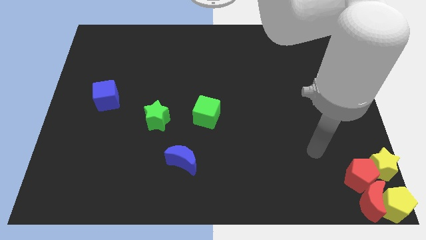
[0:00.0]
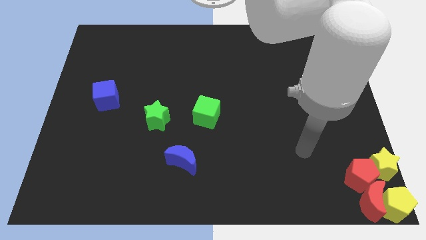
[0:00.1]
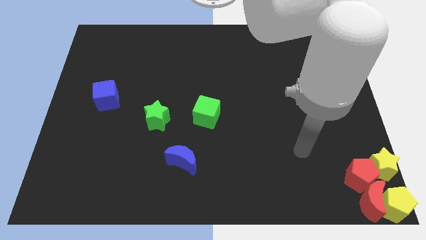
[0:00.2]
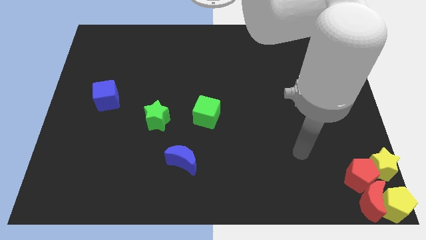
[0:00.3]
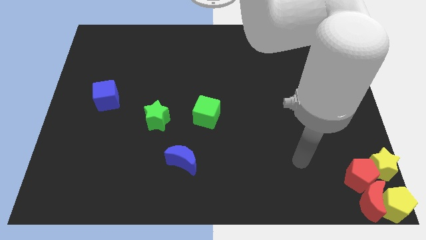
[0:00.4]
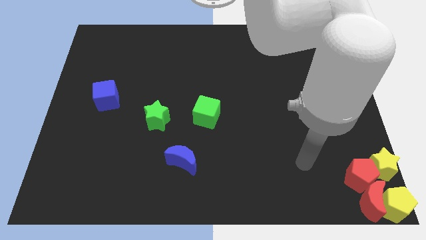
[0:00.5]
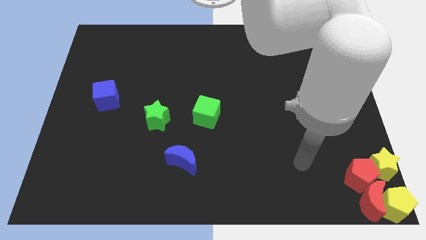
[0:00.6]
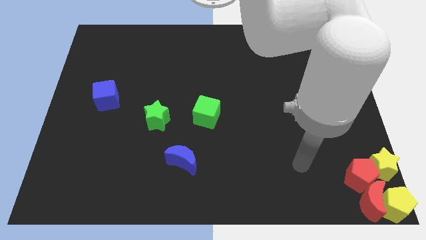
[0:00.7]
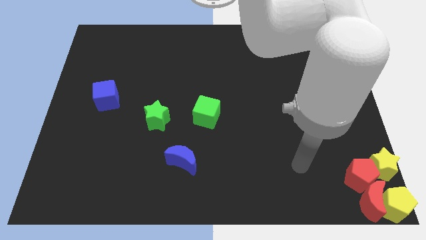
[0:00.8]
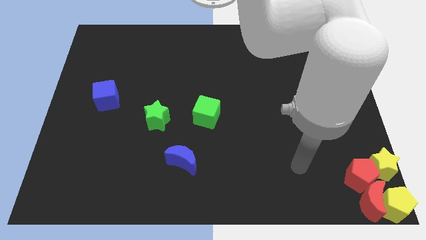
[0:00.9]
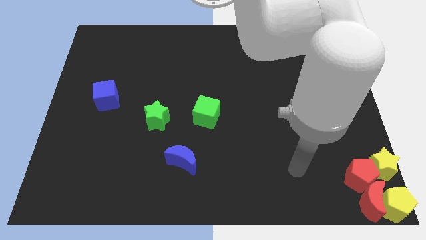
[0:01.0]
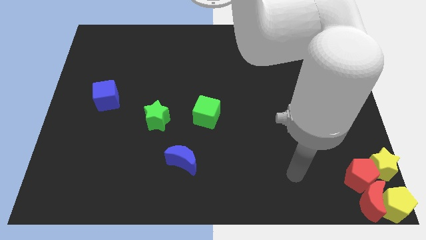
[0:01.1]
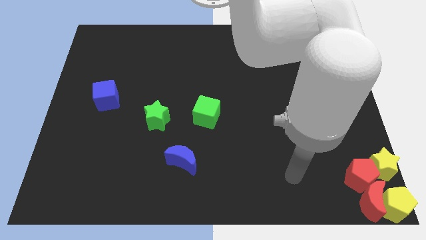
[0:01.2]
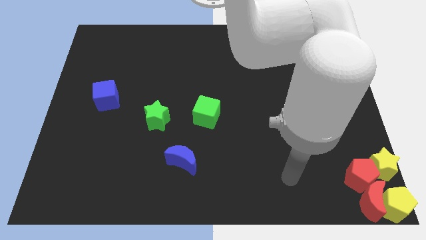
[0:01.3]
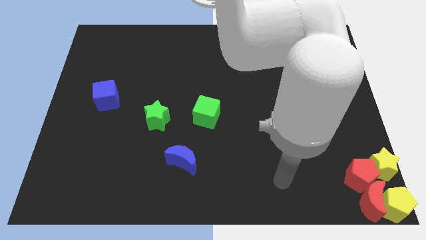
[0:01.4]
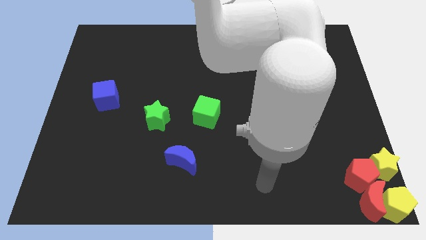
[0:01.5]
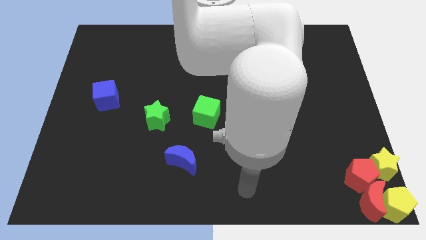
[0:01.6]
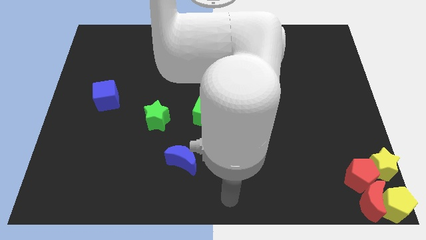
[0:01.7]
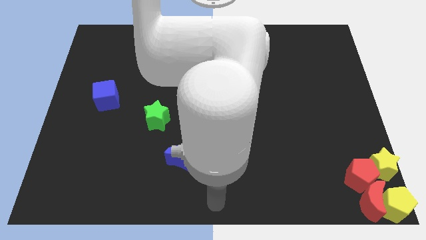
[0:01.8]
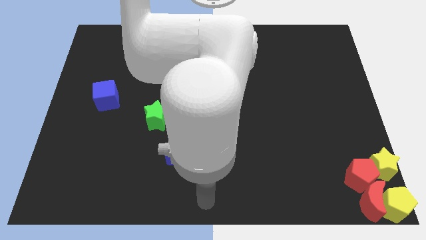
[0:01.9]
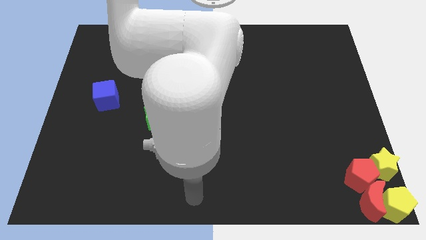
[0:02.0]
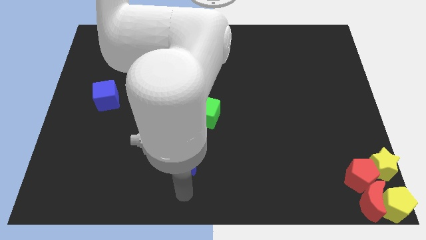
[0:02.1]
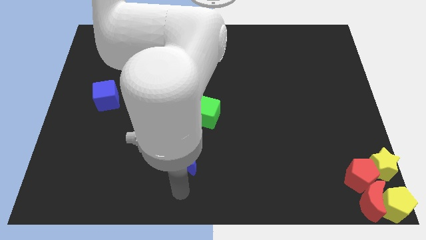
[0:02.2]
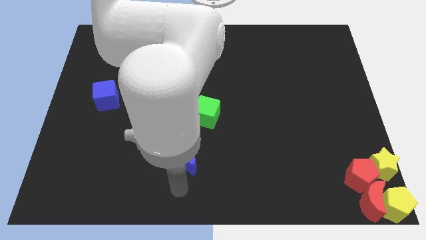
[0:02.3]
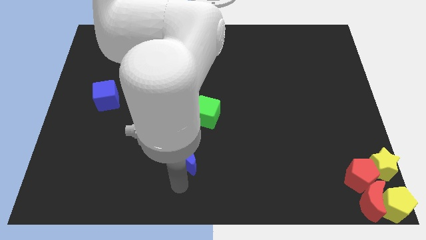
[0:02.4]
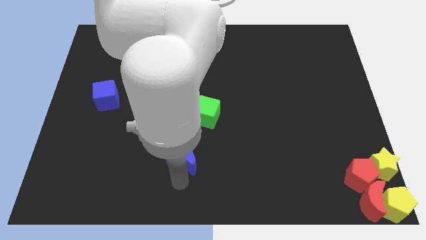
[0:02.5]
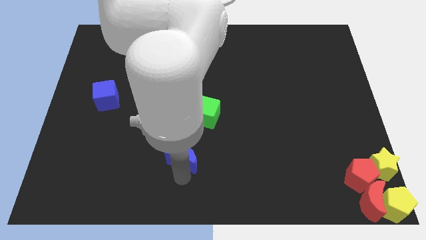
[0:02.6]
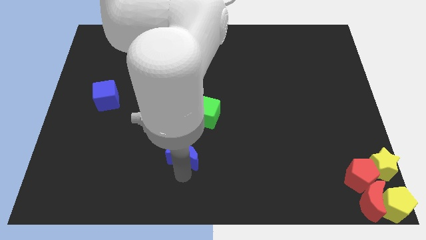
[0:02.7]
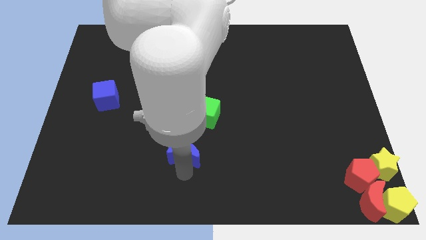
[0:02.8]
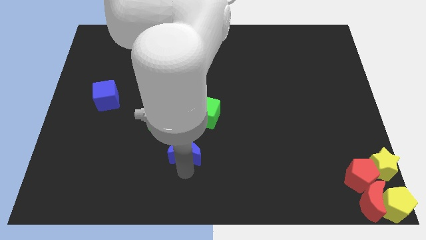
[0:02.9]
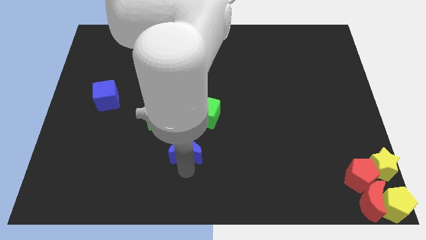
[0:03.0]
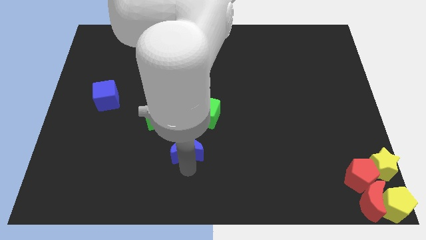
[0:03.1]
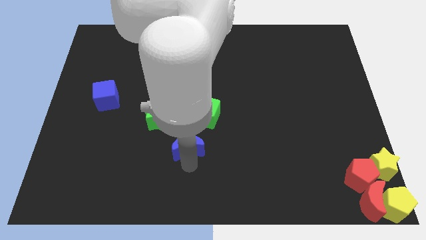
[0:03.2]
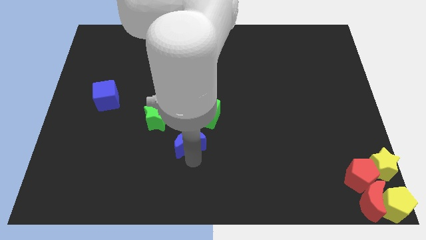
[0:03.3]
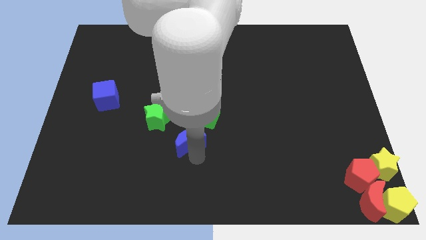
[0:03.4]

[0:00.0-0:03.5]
move the blue crescent to the bottom of the green cube

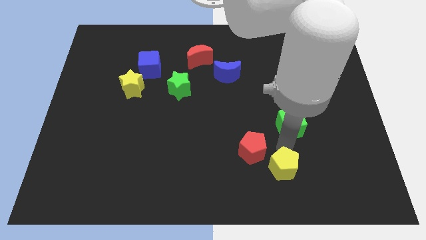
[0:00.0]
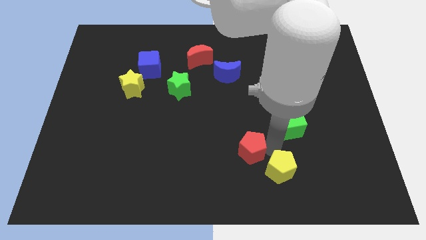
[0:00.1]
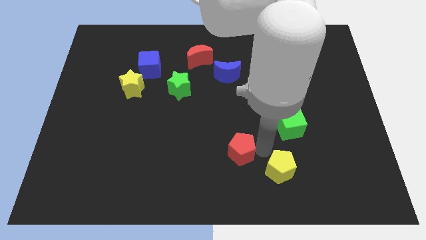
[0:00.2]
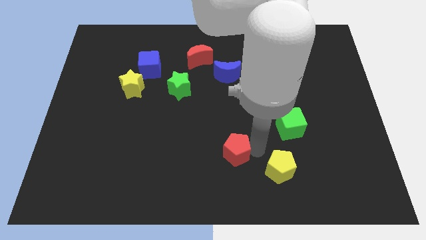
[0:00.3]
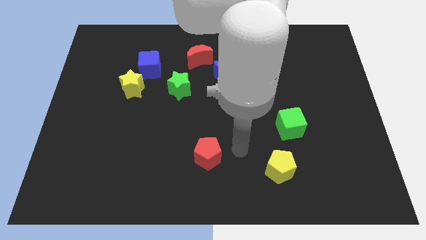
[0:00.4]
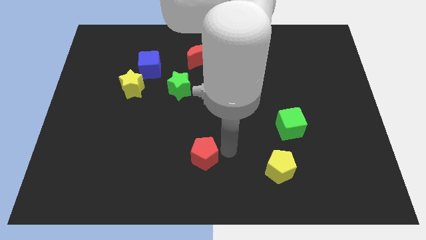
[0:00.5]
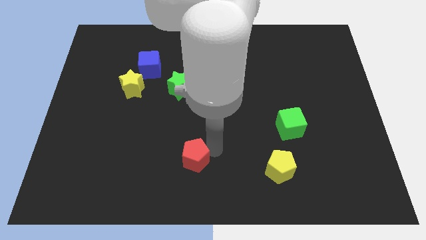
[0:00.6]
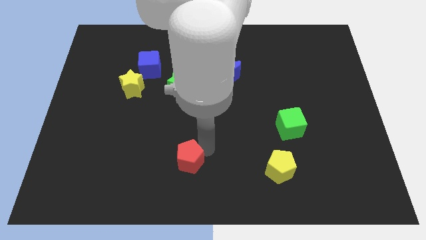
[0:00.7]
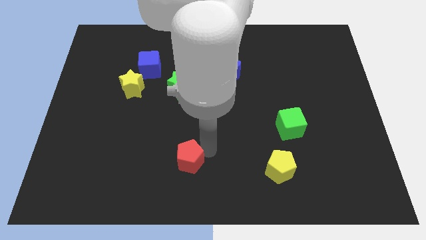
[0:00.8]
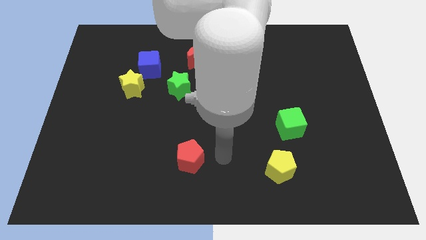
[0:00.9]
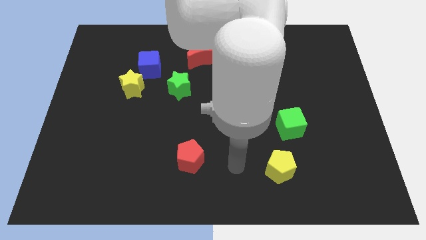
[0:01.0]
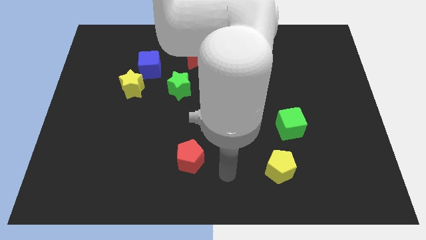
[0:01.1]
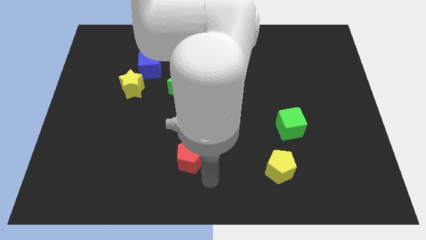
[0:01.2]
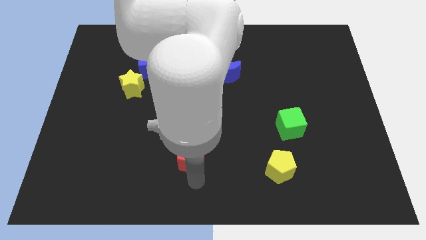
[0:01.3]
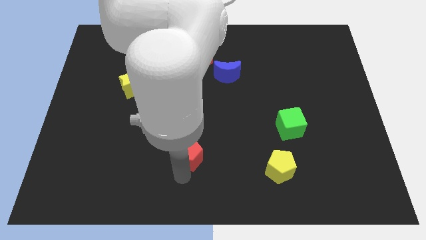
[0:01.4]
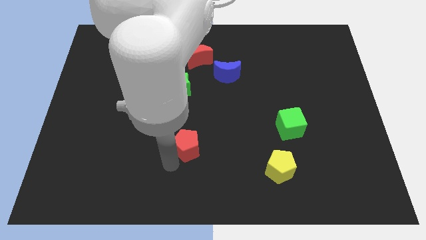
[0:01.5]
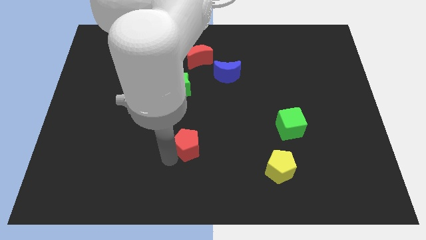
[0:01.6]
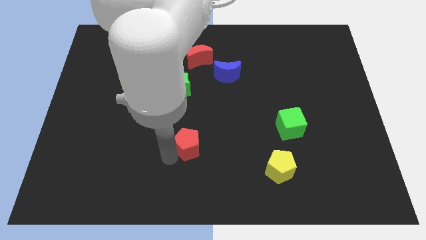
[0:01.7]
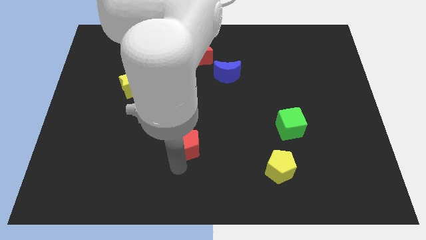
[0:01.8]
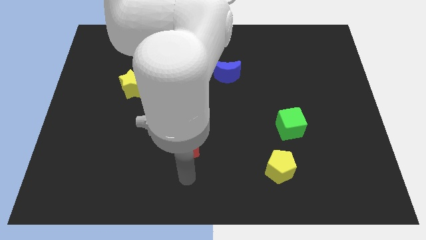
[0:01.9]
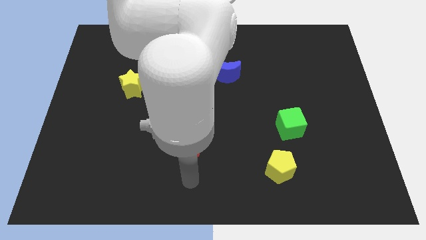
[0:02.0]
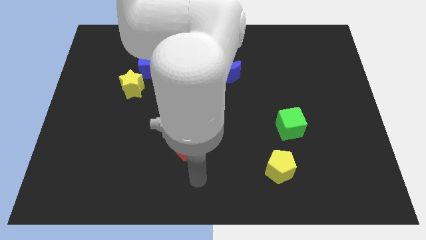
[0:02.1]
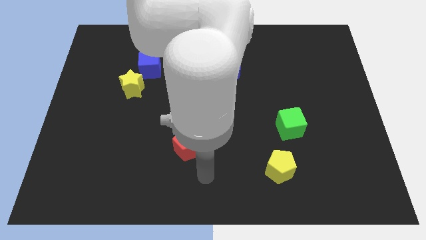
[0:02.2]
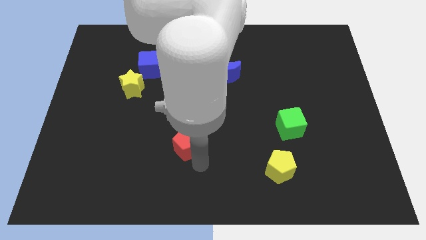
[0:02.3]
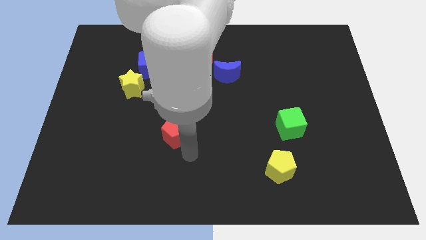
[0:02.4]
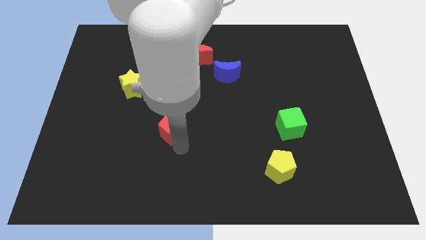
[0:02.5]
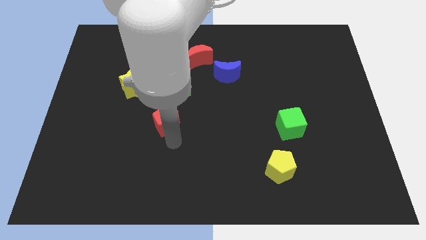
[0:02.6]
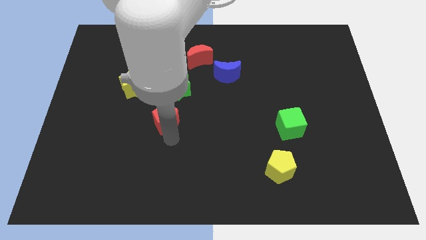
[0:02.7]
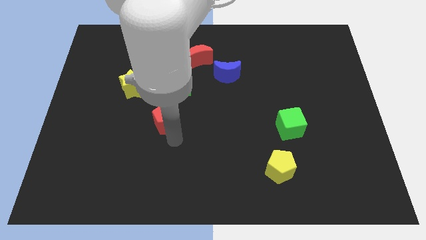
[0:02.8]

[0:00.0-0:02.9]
move the red pentagon to the bottom left of the green star

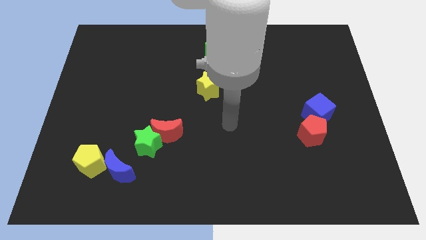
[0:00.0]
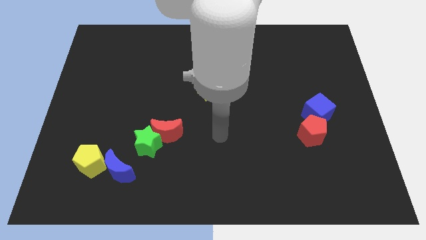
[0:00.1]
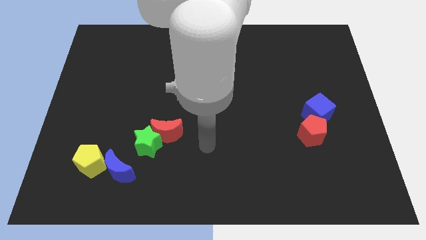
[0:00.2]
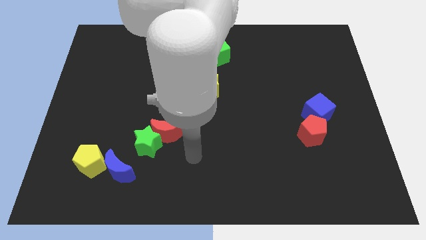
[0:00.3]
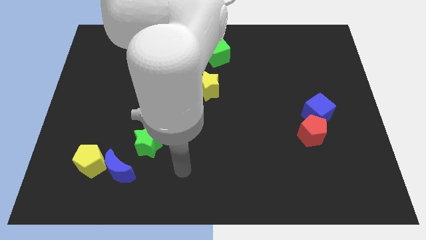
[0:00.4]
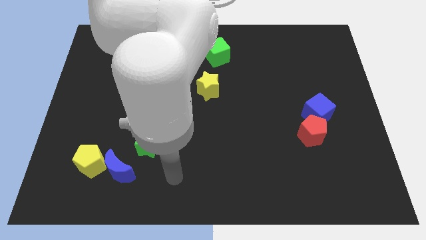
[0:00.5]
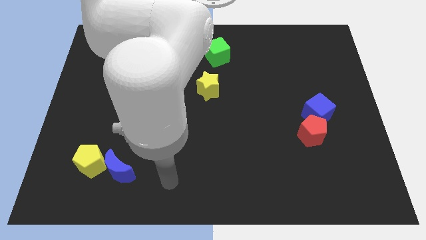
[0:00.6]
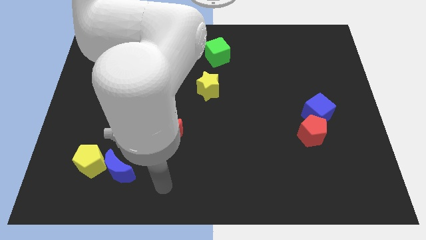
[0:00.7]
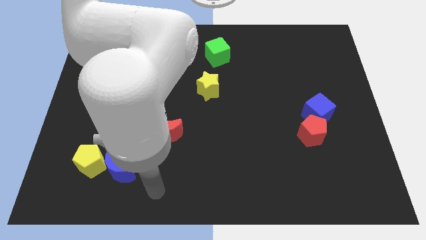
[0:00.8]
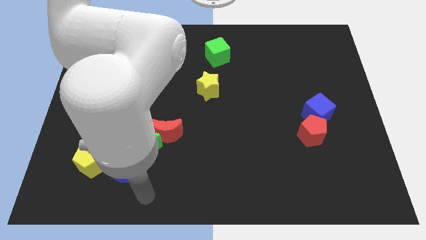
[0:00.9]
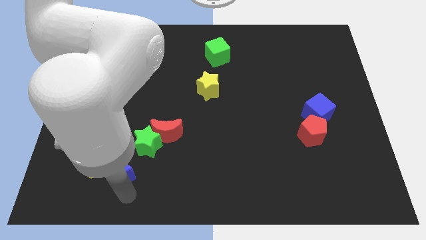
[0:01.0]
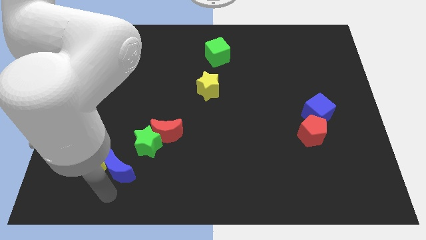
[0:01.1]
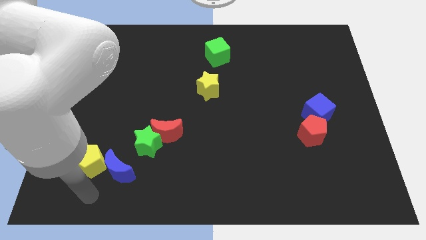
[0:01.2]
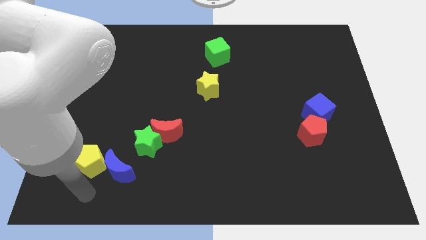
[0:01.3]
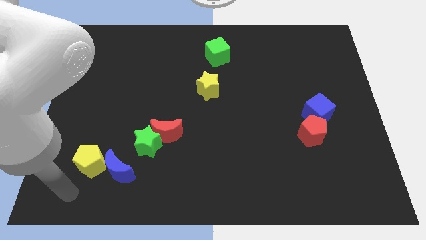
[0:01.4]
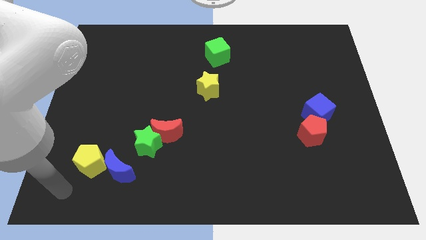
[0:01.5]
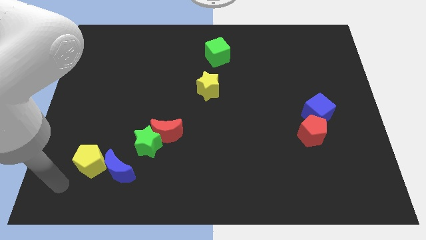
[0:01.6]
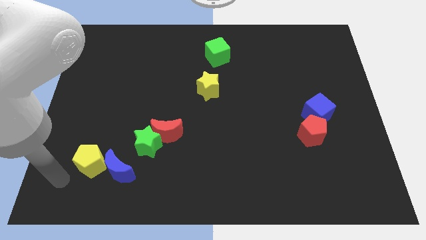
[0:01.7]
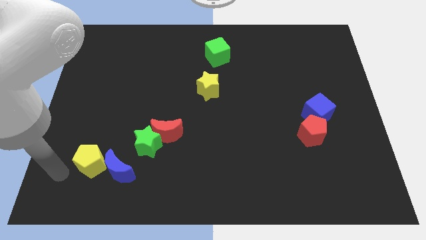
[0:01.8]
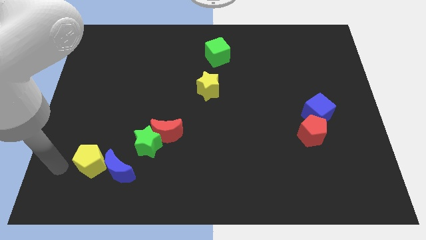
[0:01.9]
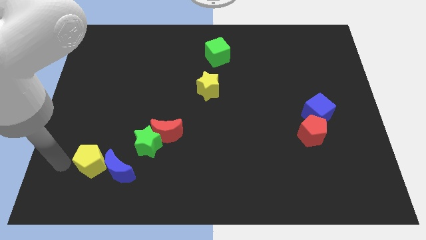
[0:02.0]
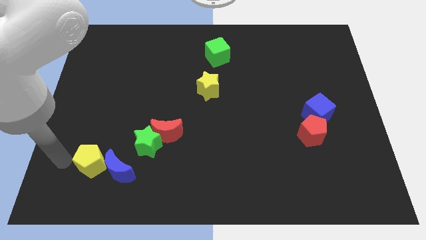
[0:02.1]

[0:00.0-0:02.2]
move your arm to the left of the yellow pentagon

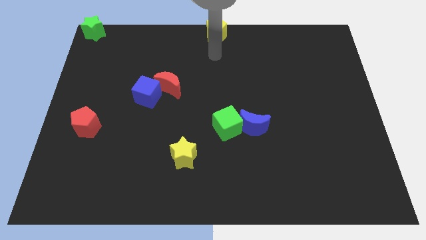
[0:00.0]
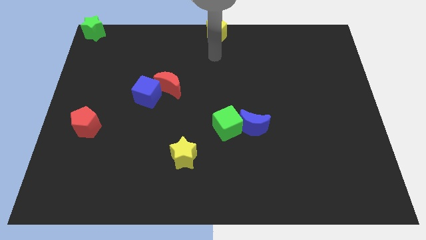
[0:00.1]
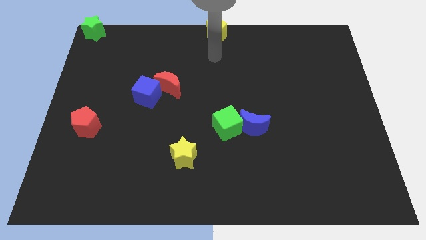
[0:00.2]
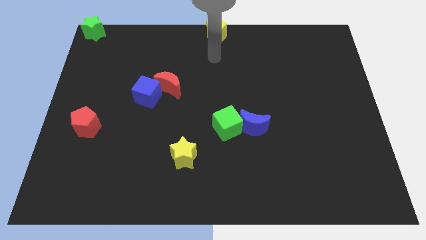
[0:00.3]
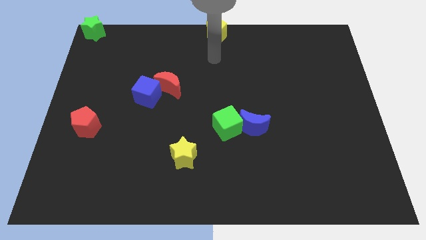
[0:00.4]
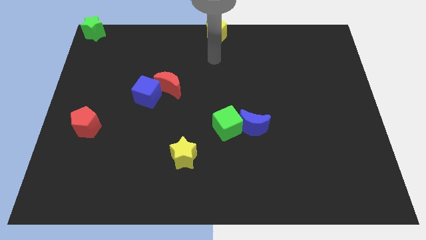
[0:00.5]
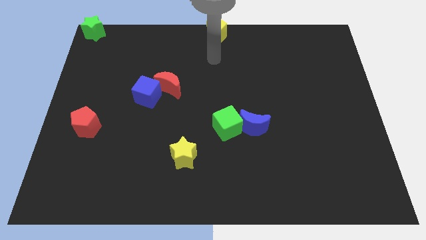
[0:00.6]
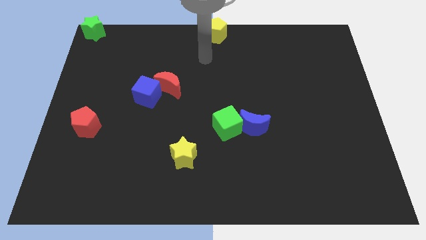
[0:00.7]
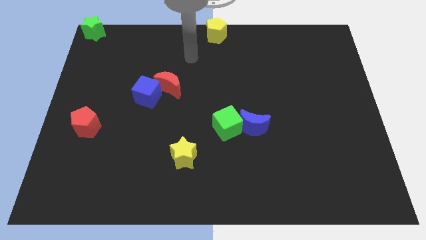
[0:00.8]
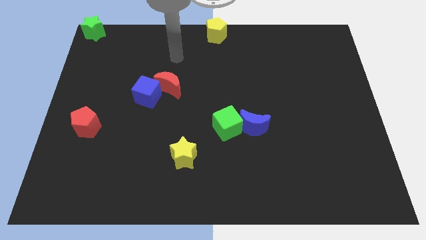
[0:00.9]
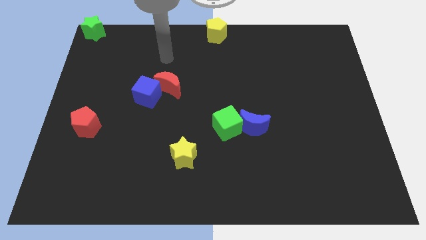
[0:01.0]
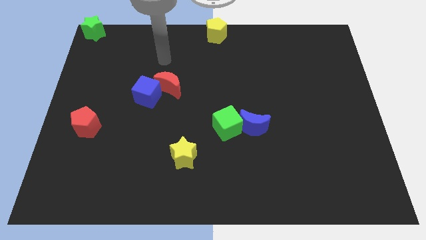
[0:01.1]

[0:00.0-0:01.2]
move your arm away from yellow pentagon
